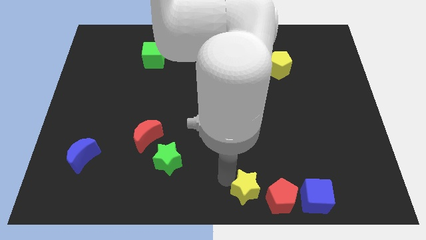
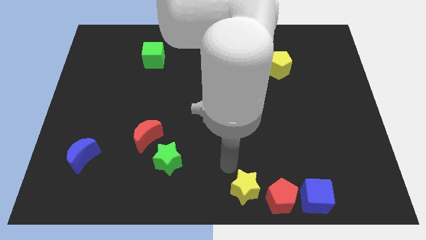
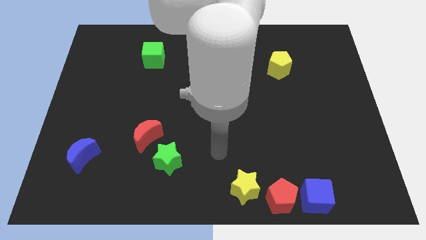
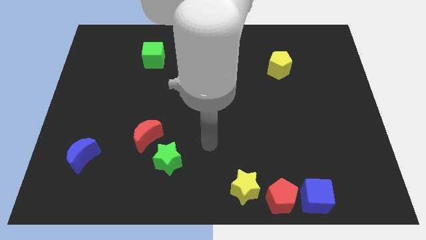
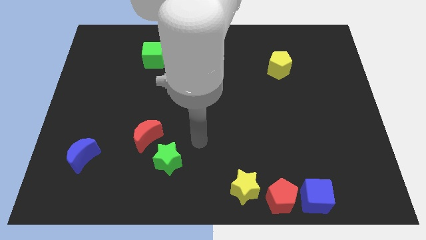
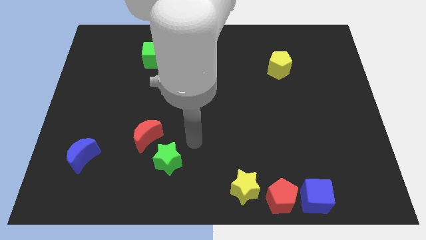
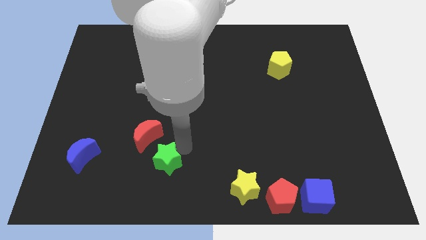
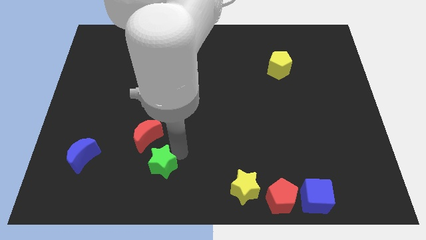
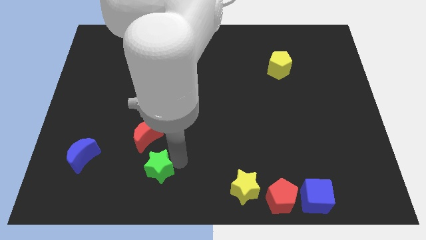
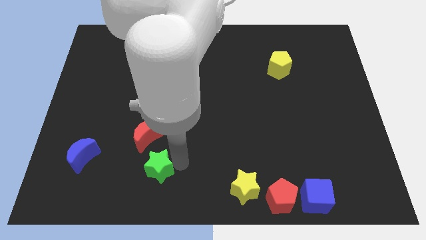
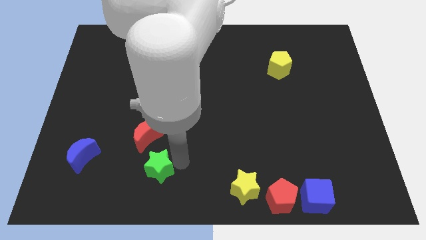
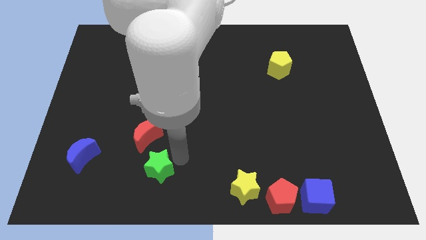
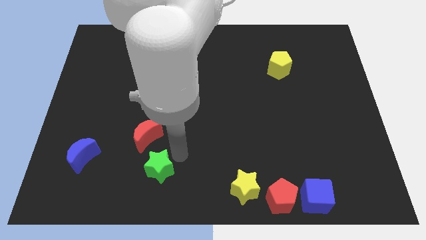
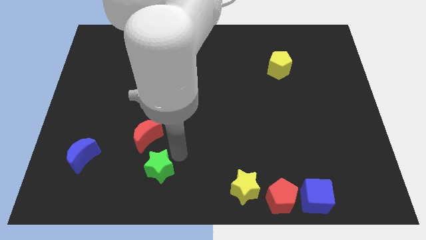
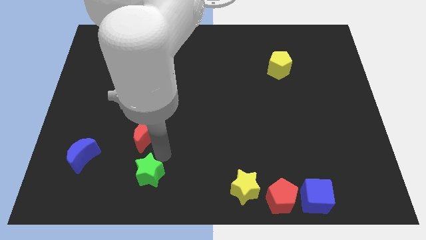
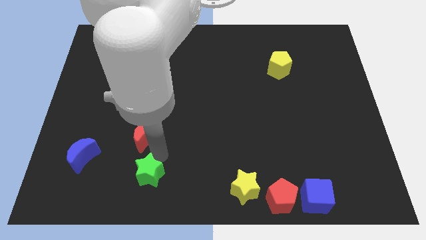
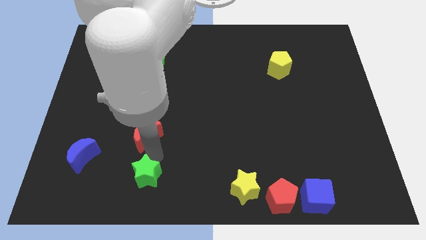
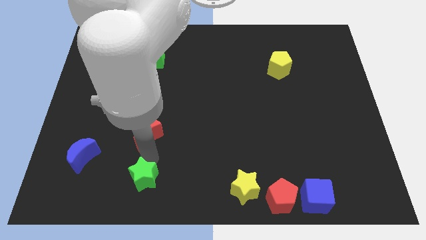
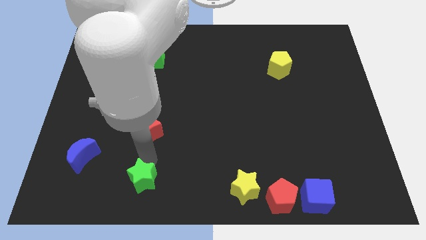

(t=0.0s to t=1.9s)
push the green star below the red moon

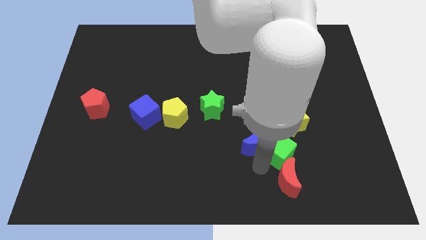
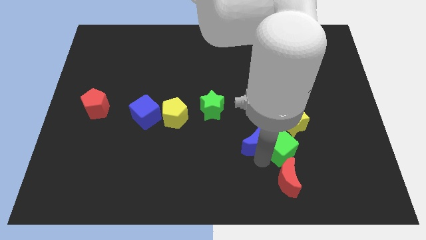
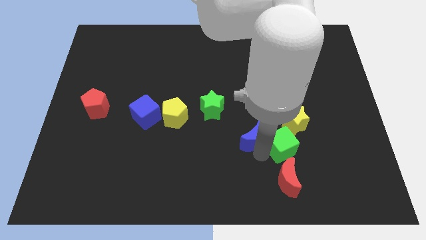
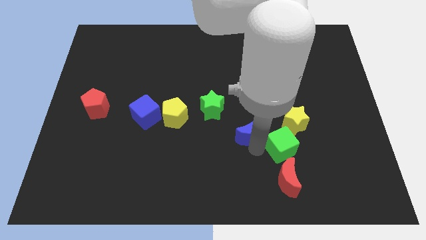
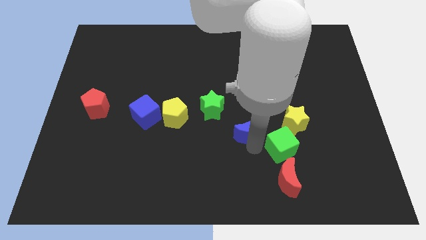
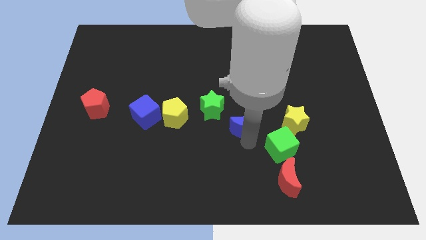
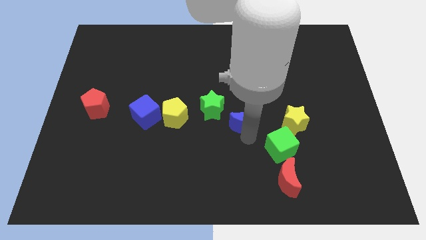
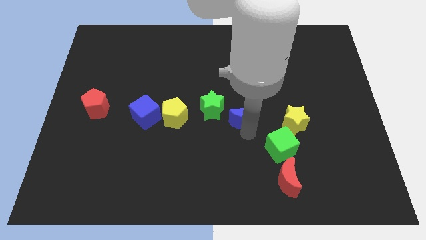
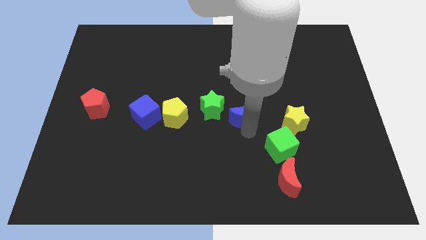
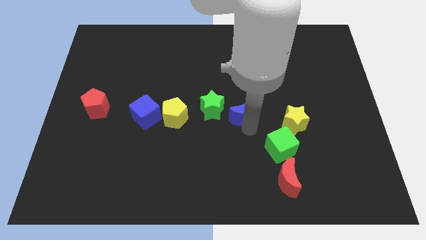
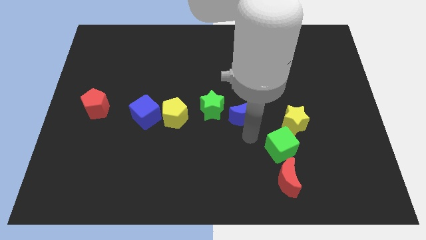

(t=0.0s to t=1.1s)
place the blue moon right to the green star

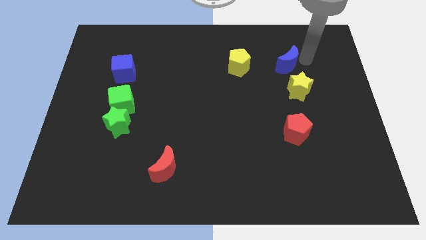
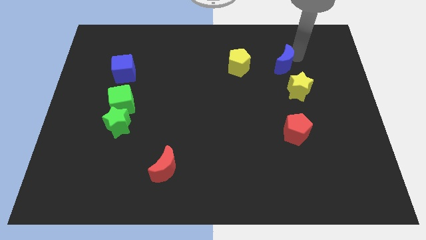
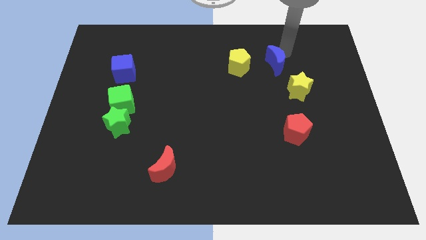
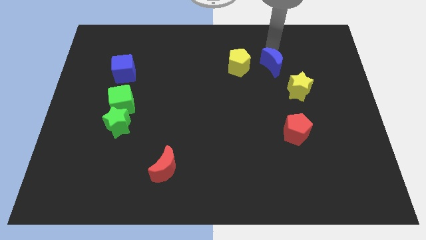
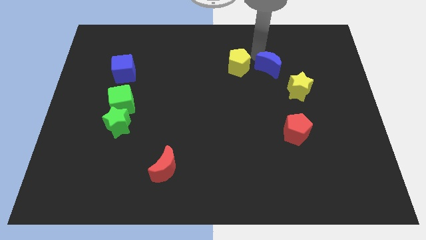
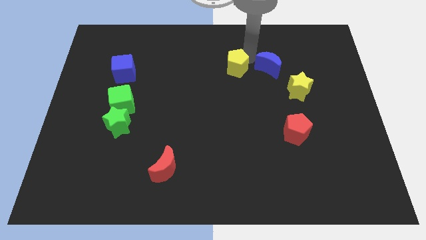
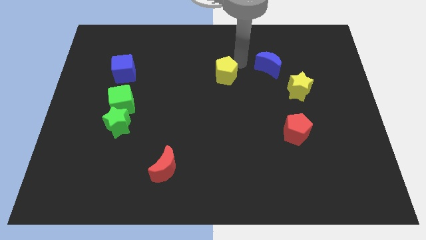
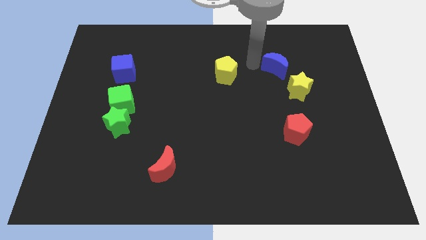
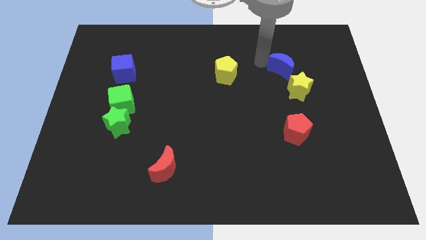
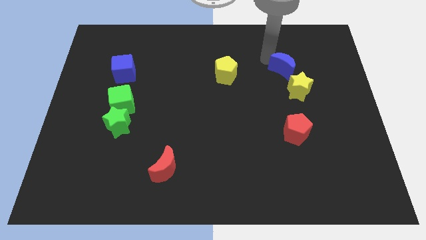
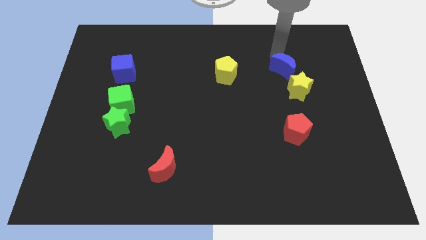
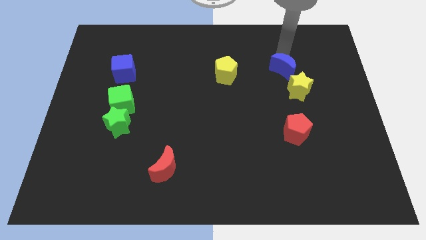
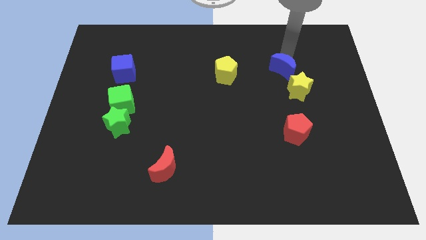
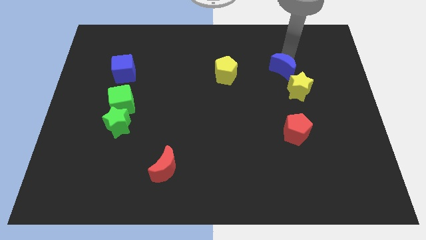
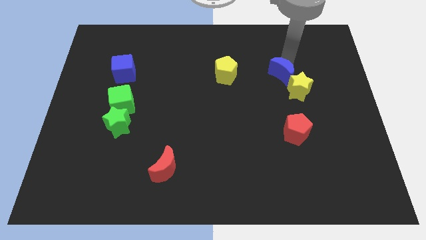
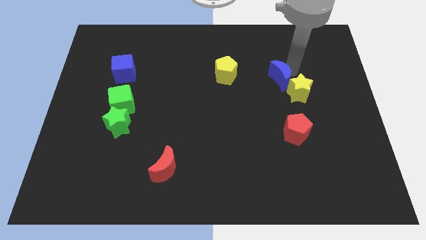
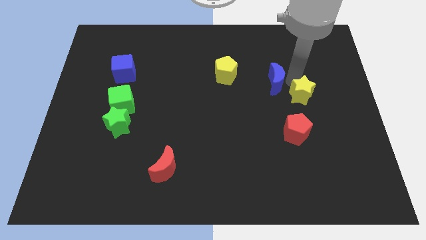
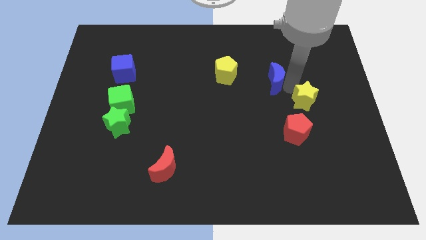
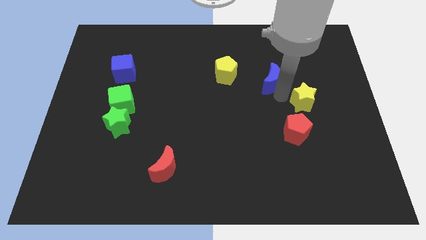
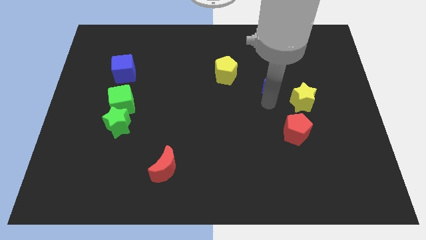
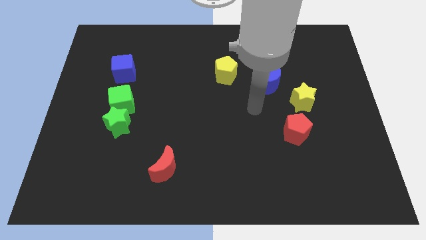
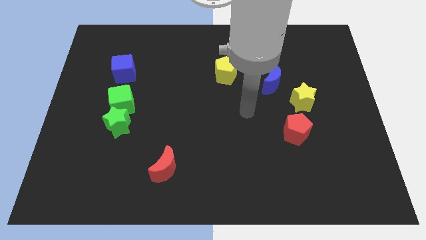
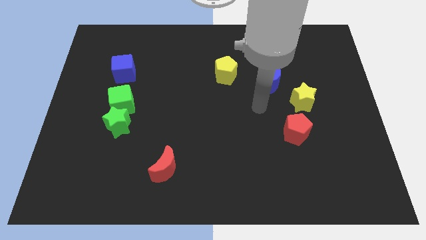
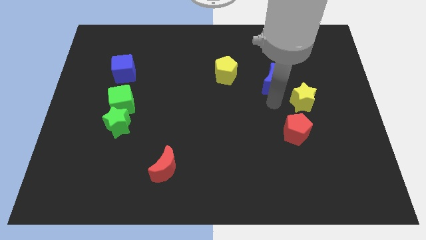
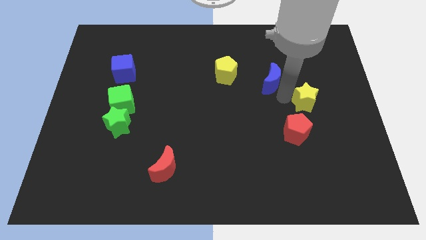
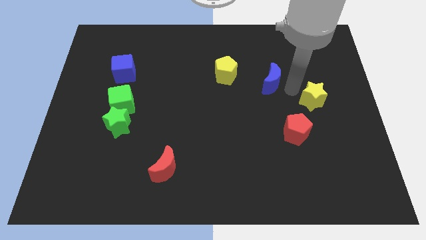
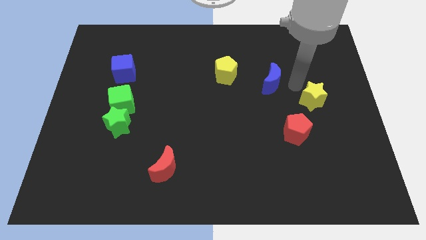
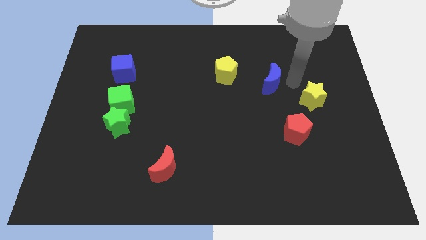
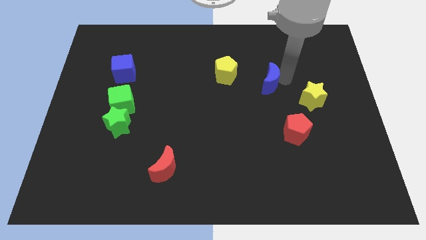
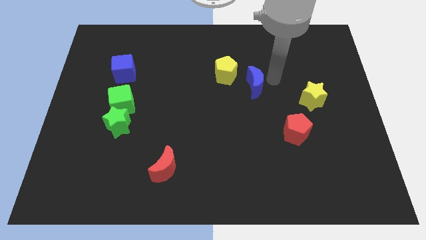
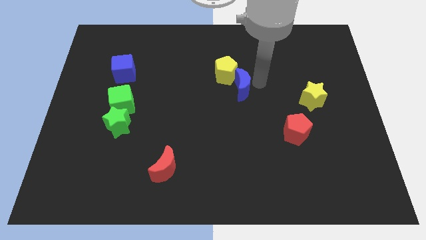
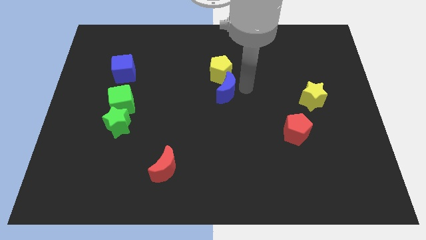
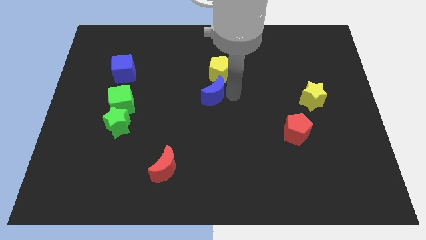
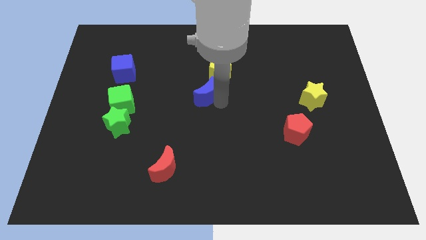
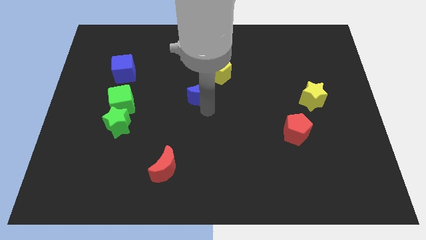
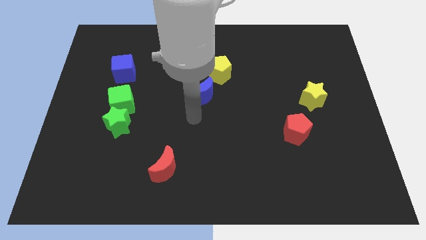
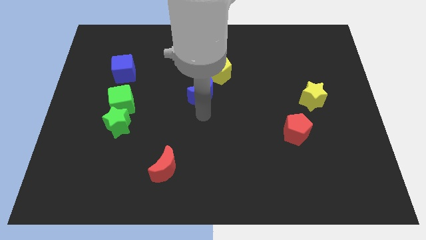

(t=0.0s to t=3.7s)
place the blue crescent to the bottom of the yellow pentagon

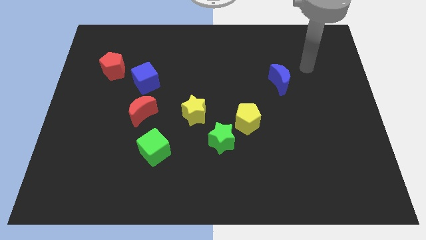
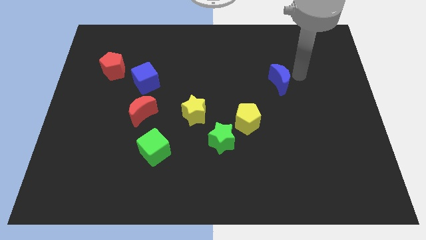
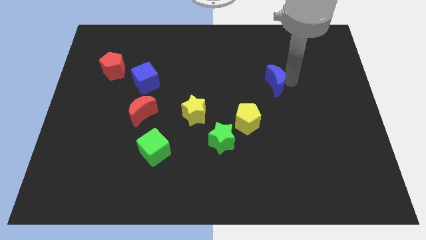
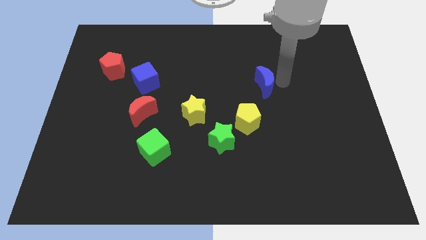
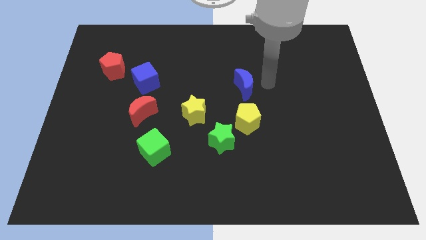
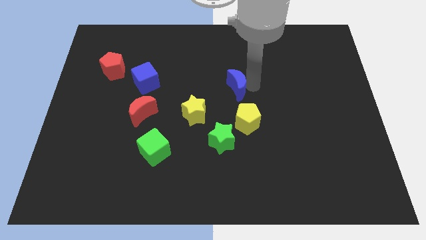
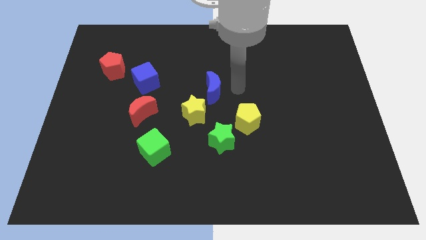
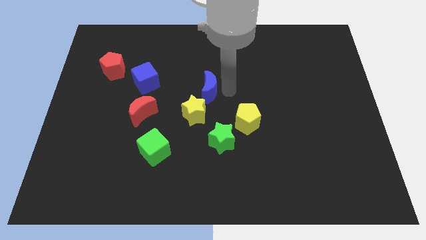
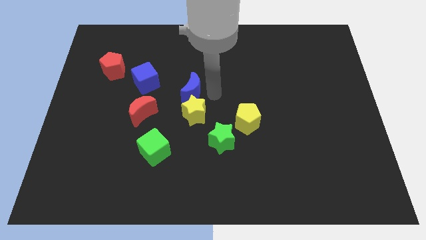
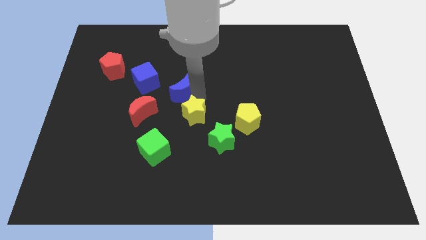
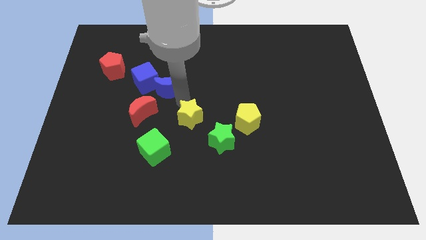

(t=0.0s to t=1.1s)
push the blue moon towards the blue cube

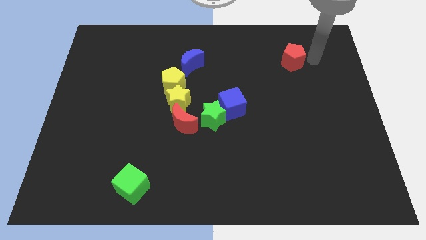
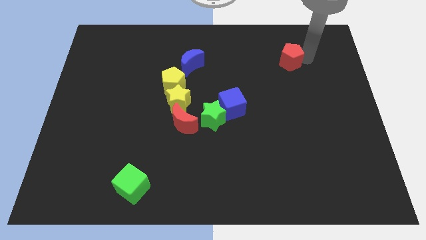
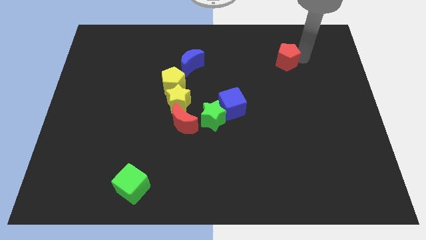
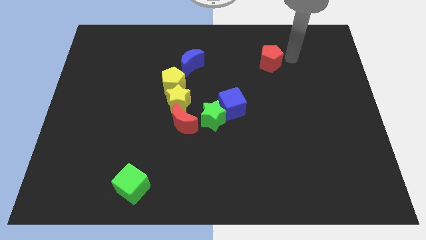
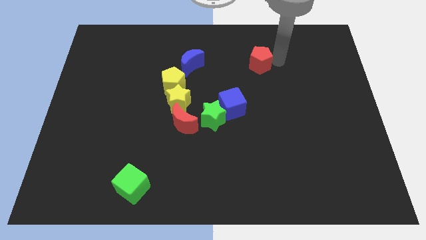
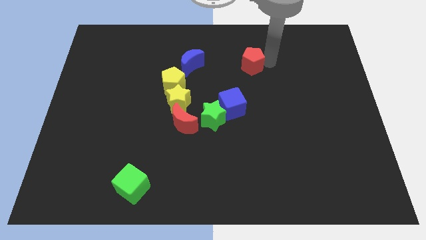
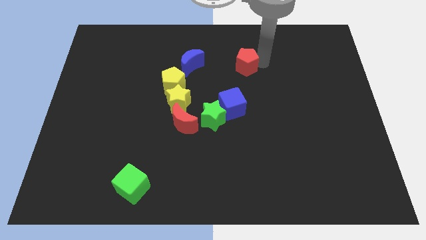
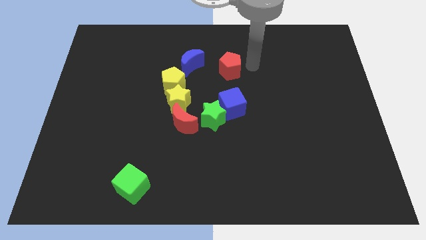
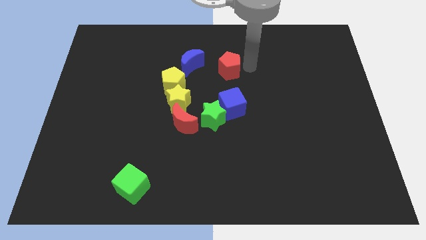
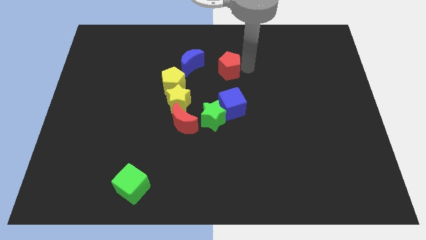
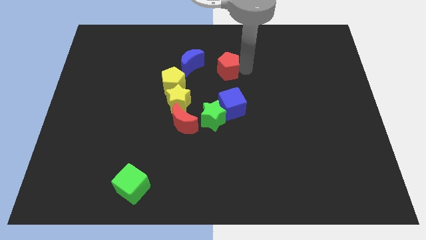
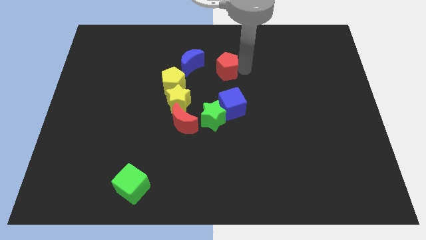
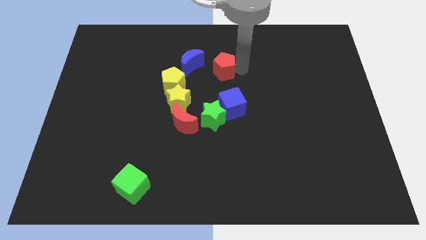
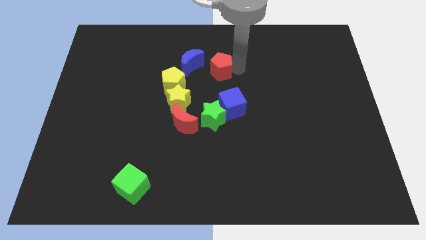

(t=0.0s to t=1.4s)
place the red pentagon vertically above the blue cube
